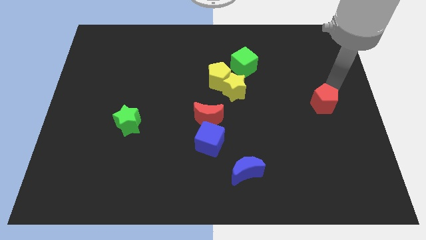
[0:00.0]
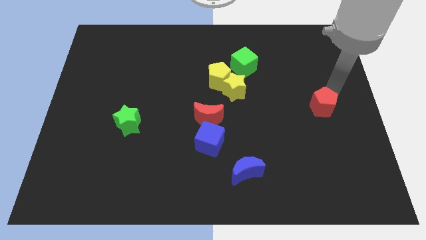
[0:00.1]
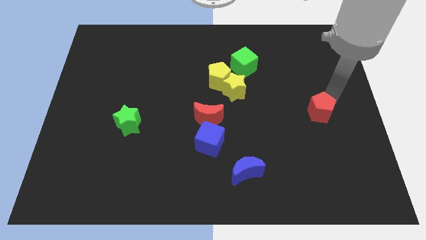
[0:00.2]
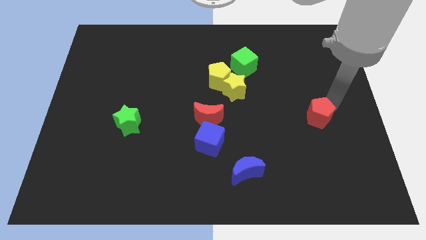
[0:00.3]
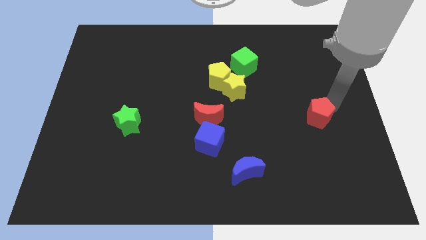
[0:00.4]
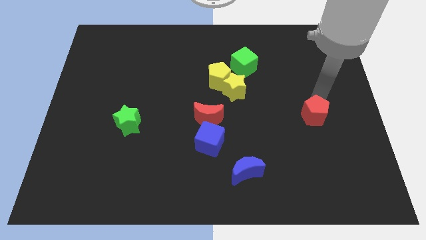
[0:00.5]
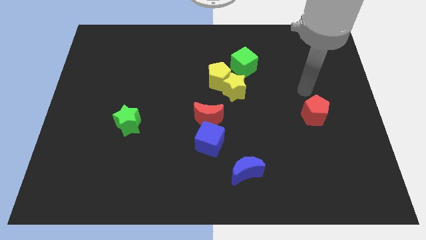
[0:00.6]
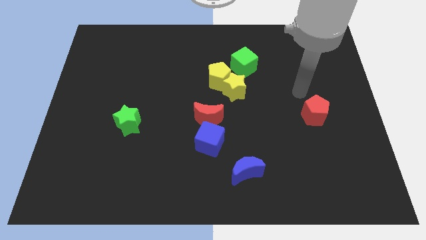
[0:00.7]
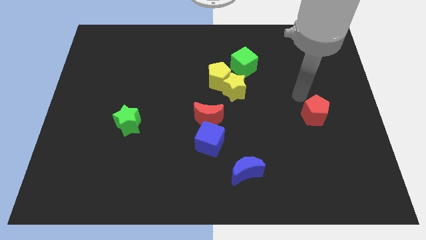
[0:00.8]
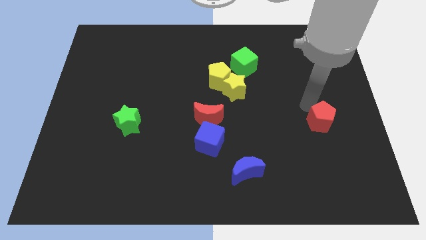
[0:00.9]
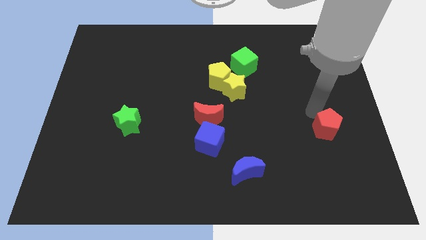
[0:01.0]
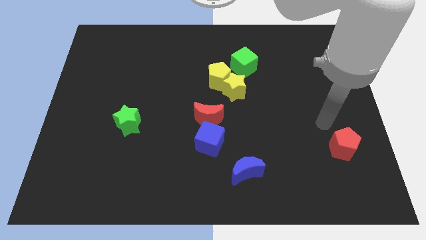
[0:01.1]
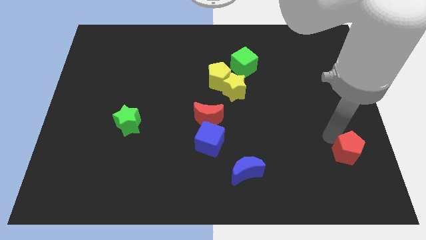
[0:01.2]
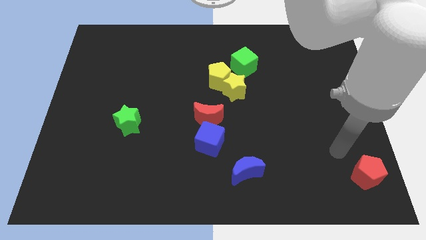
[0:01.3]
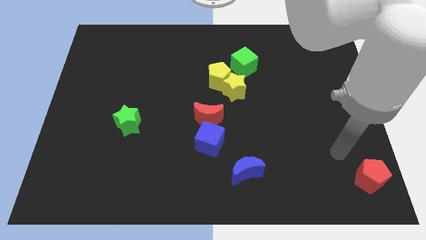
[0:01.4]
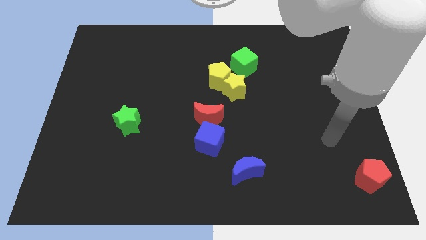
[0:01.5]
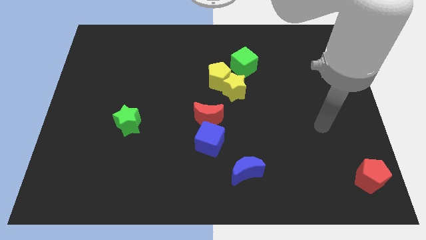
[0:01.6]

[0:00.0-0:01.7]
push the red pentagon to the bottom right

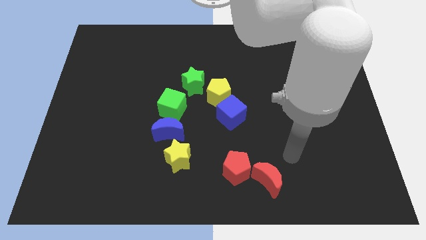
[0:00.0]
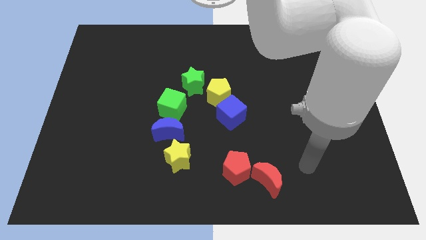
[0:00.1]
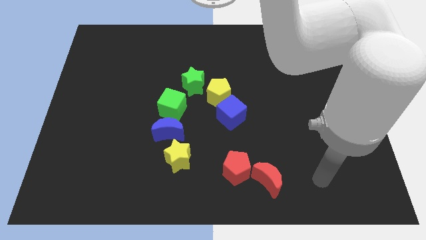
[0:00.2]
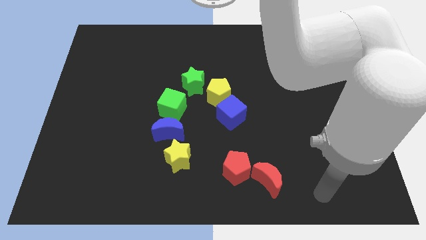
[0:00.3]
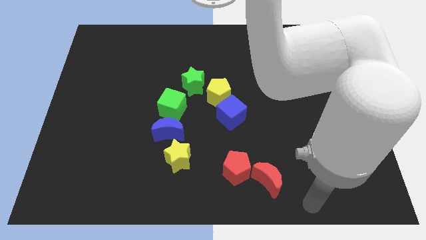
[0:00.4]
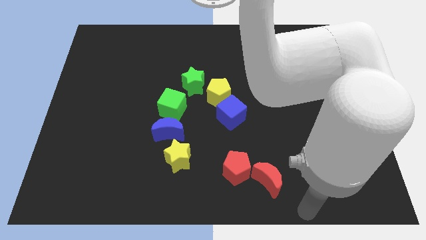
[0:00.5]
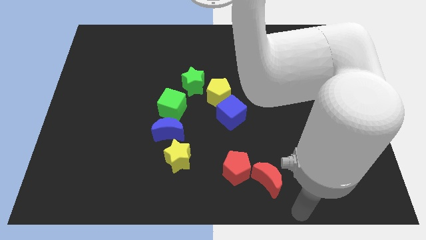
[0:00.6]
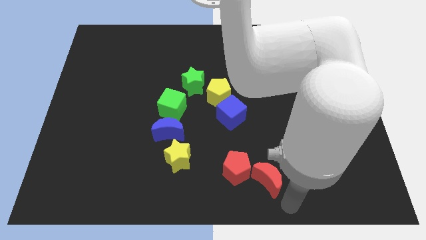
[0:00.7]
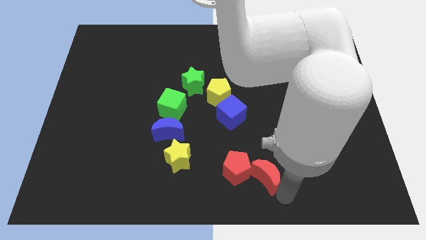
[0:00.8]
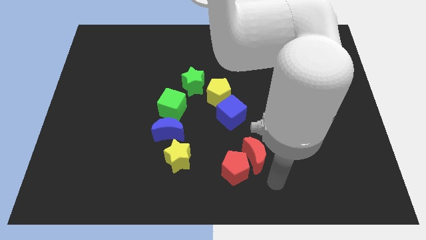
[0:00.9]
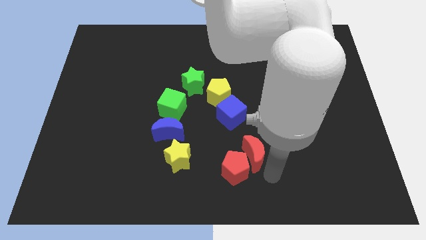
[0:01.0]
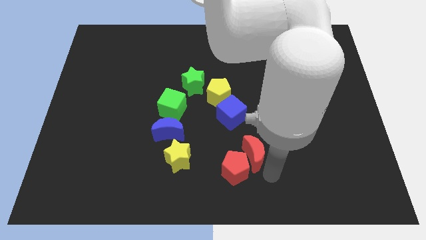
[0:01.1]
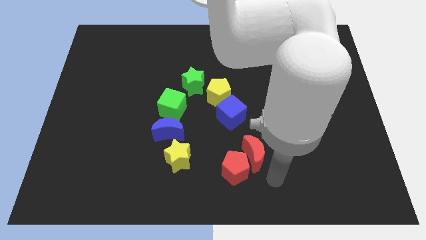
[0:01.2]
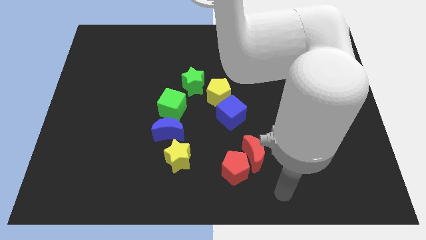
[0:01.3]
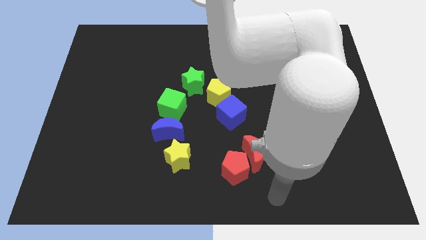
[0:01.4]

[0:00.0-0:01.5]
move the red crescent to the top right of the red pentagon

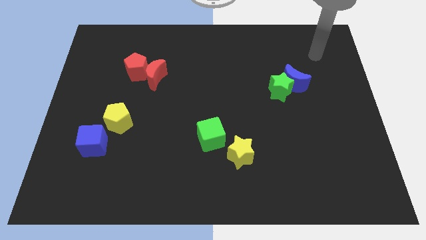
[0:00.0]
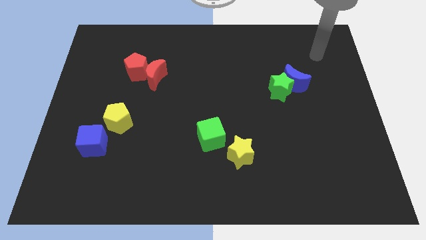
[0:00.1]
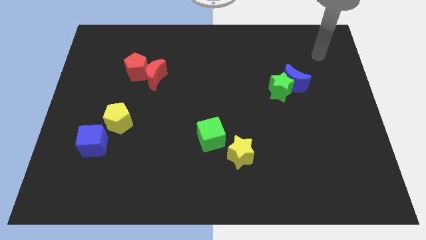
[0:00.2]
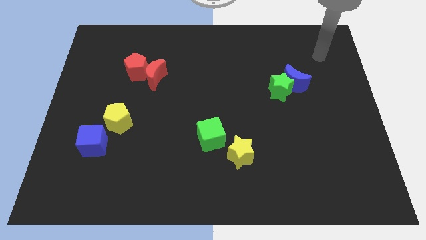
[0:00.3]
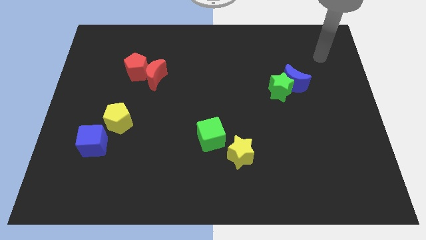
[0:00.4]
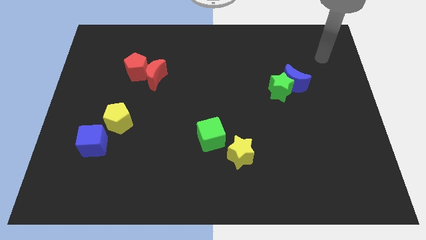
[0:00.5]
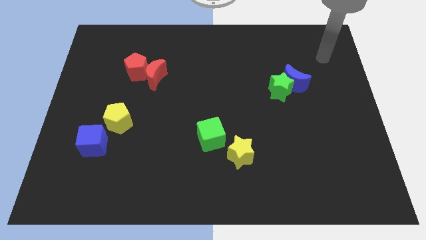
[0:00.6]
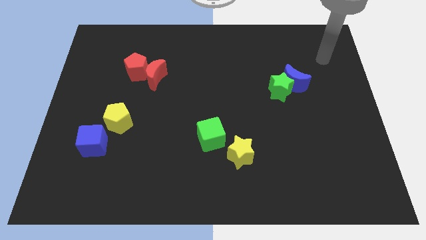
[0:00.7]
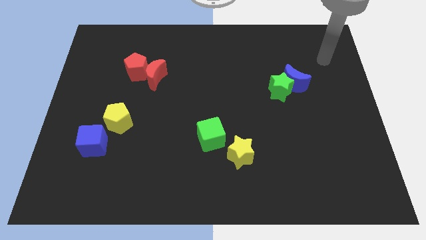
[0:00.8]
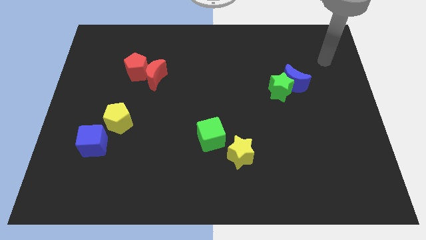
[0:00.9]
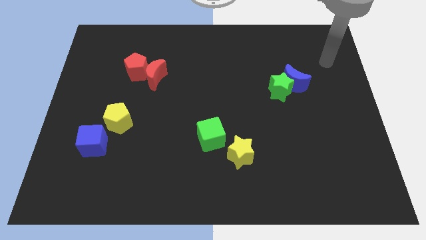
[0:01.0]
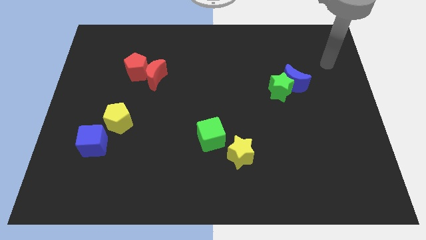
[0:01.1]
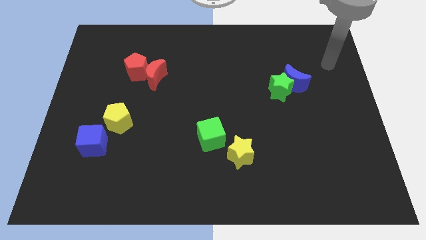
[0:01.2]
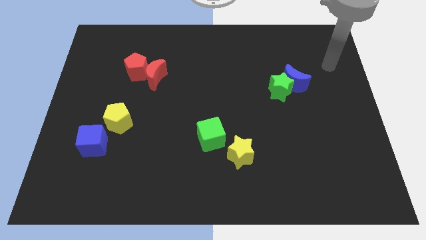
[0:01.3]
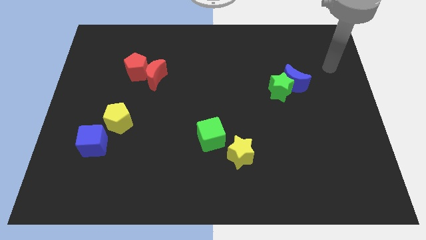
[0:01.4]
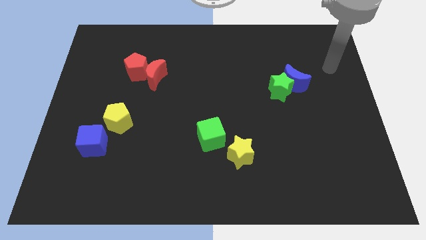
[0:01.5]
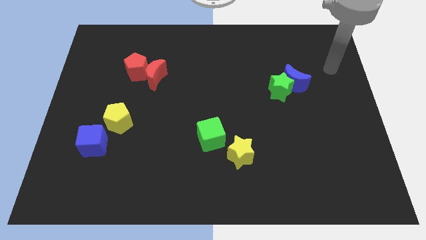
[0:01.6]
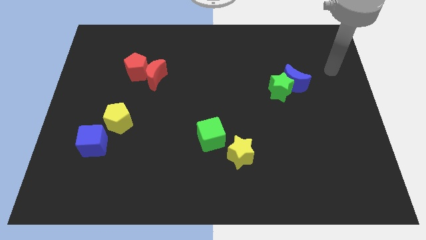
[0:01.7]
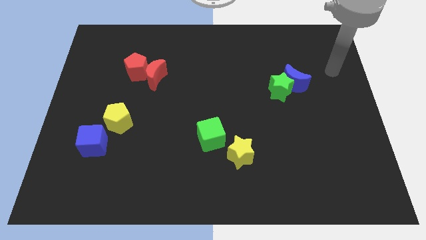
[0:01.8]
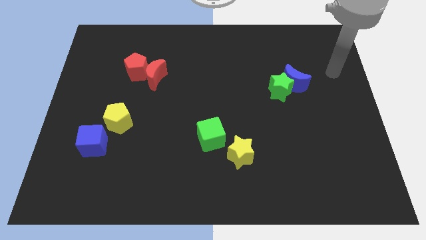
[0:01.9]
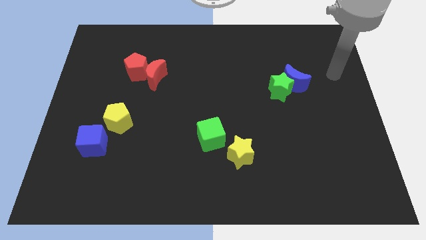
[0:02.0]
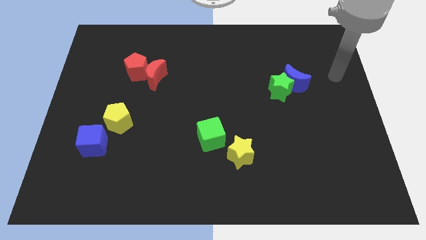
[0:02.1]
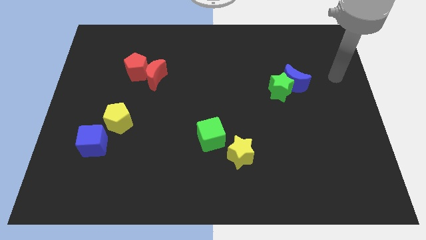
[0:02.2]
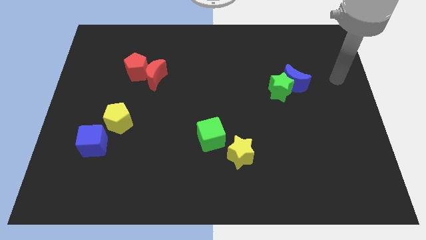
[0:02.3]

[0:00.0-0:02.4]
point your arm at the right of the blue crescent

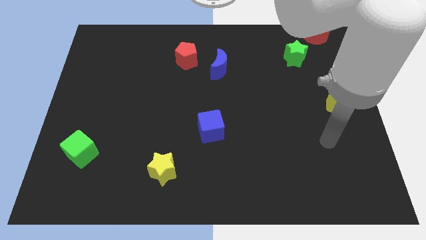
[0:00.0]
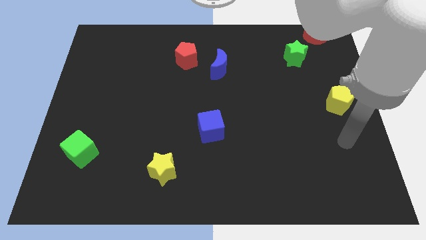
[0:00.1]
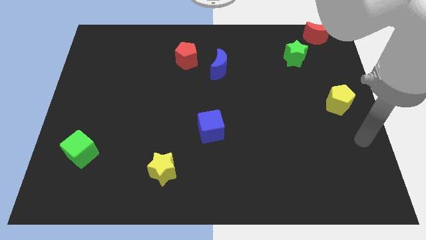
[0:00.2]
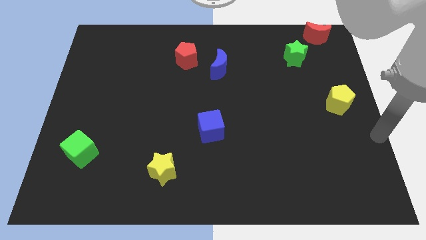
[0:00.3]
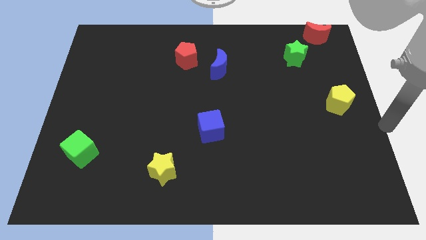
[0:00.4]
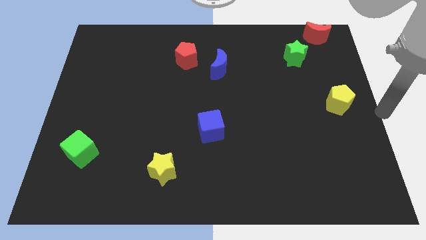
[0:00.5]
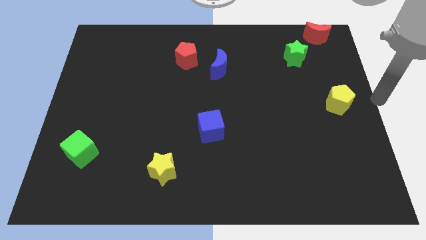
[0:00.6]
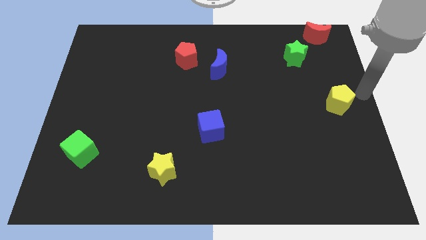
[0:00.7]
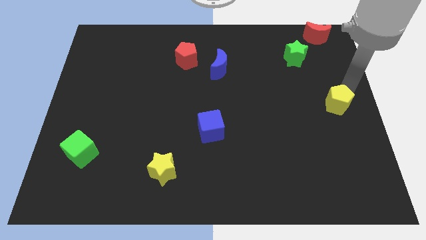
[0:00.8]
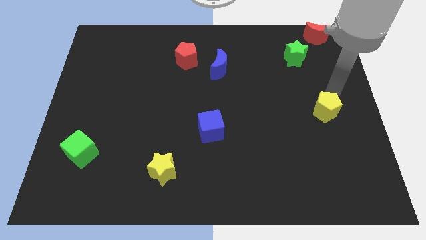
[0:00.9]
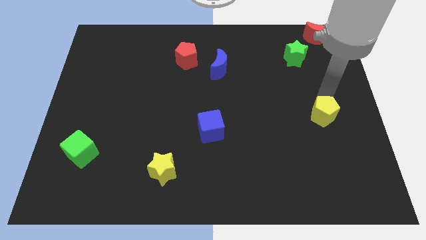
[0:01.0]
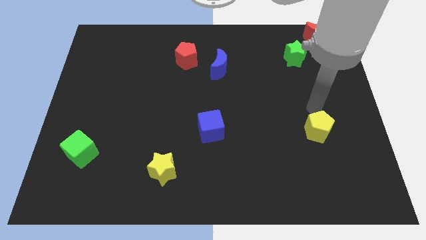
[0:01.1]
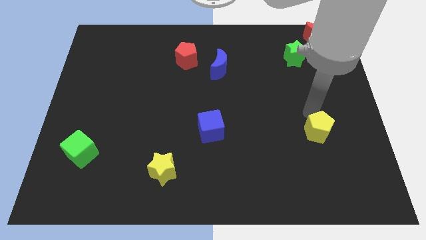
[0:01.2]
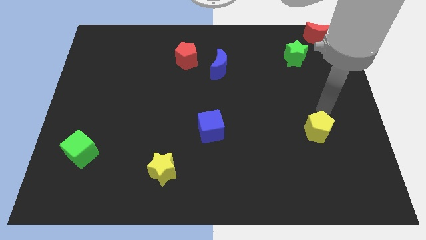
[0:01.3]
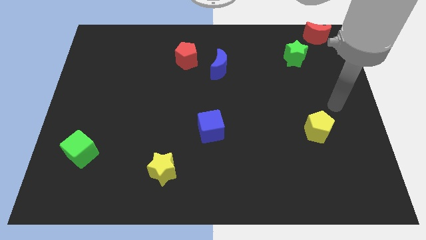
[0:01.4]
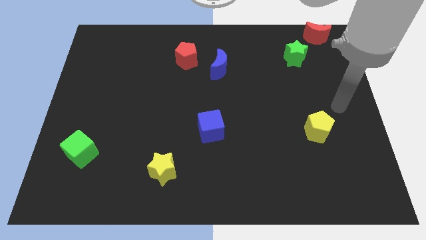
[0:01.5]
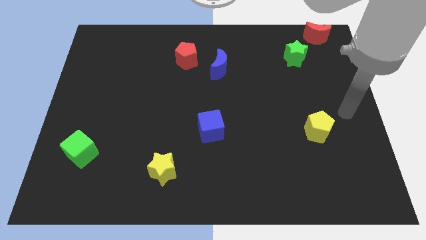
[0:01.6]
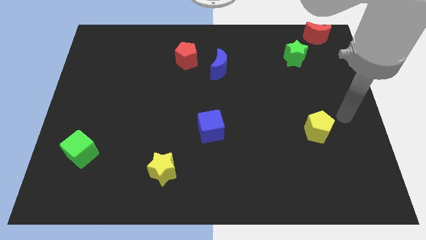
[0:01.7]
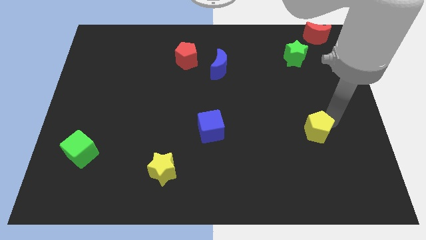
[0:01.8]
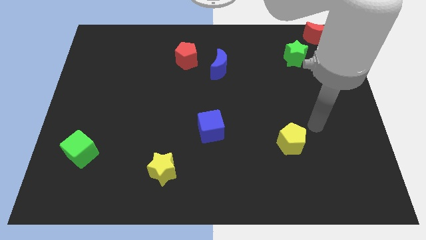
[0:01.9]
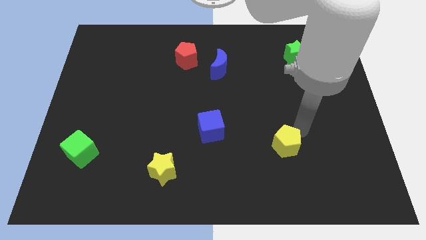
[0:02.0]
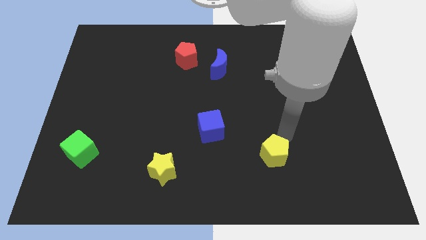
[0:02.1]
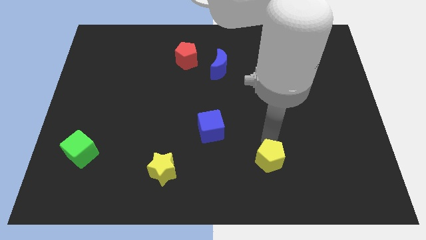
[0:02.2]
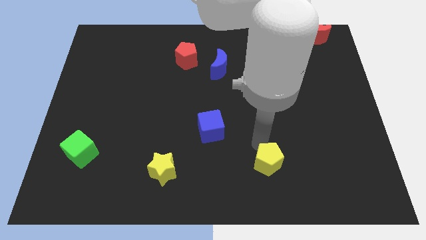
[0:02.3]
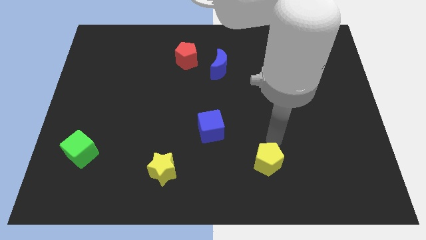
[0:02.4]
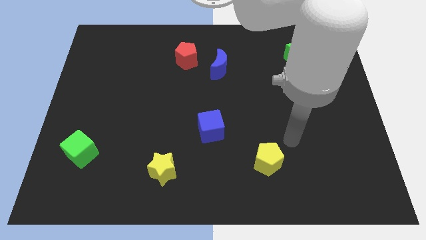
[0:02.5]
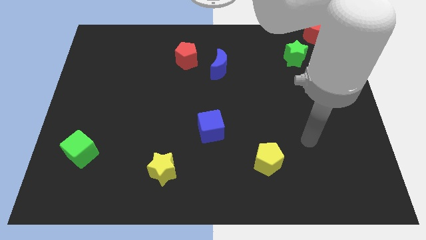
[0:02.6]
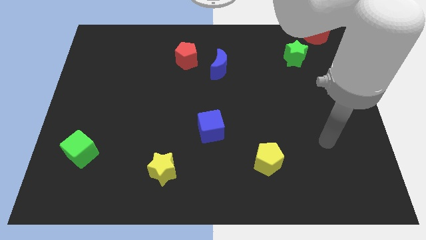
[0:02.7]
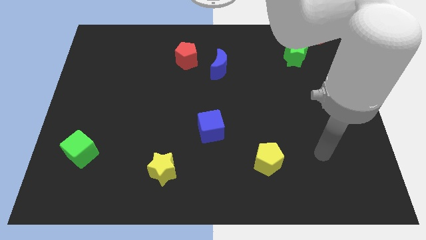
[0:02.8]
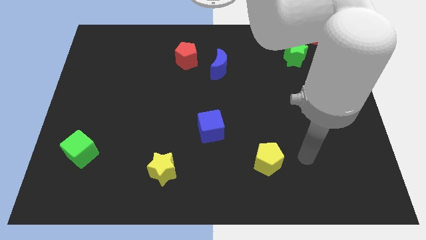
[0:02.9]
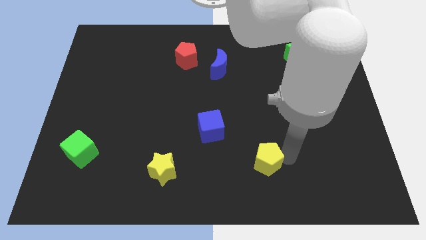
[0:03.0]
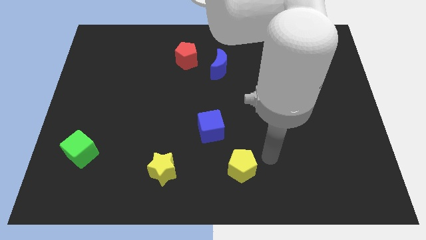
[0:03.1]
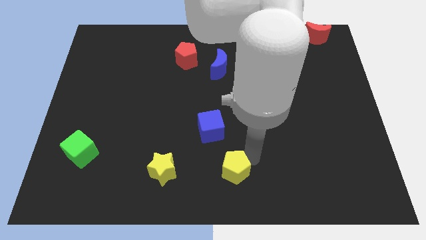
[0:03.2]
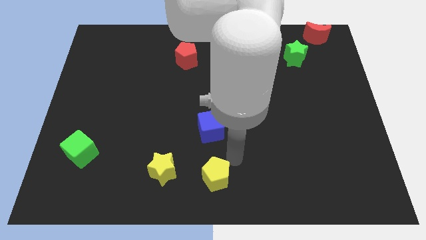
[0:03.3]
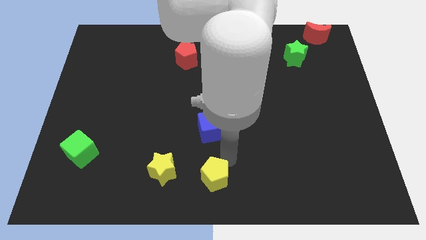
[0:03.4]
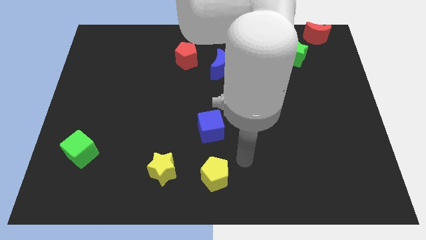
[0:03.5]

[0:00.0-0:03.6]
put the yellow pentagon to the bottom center of the board
